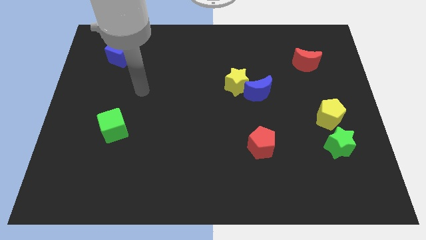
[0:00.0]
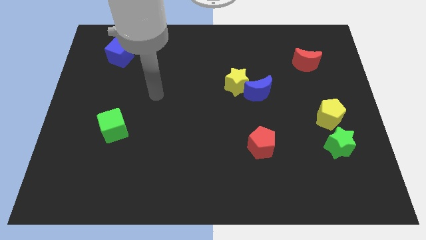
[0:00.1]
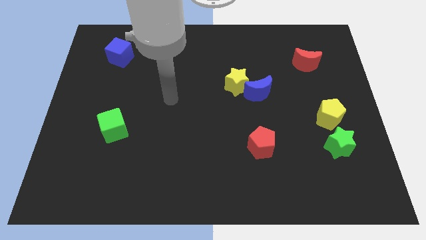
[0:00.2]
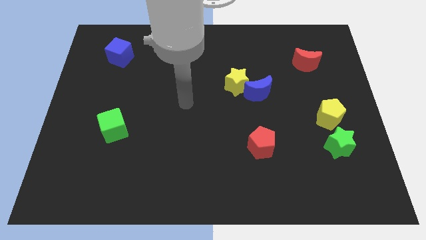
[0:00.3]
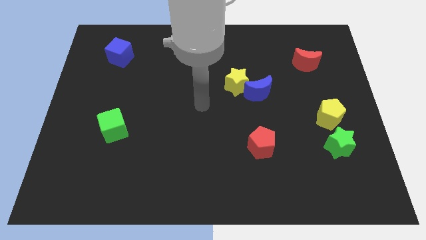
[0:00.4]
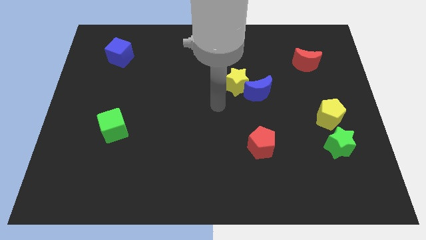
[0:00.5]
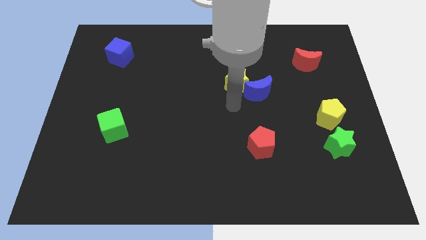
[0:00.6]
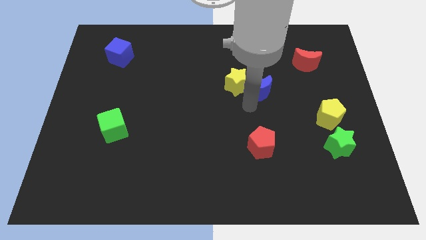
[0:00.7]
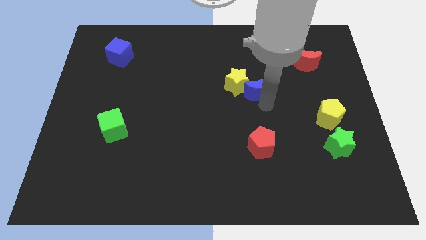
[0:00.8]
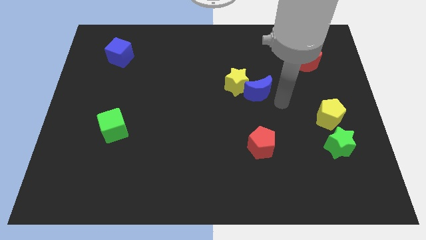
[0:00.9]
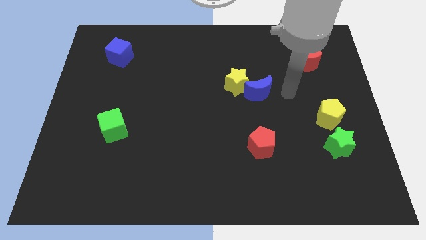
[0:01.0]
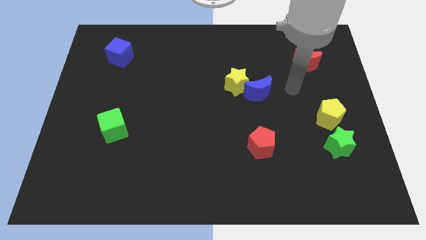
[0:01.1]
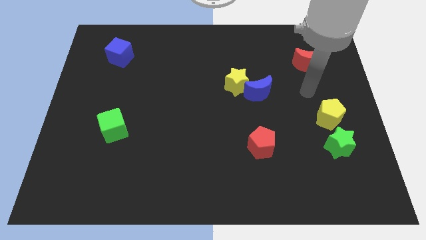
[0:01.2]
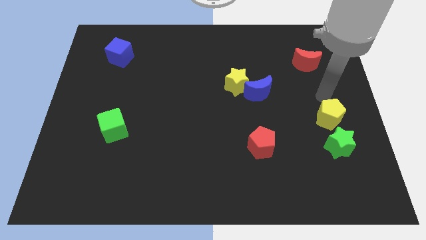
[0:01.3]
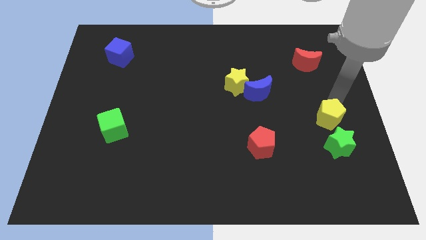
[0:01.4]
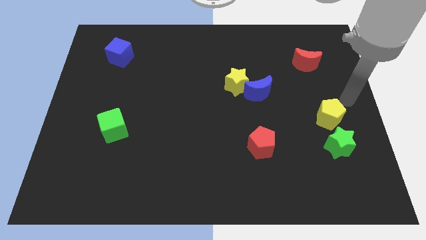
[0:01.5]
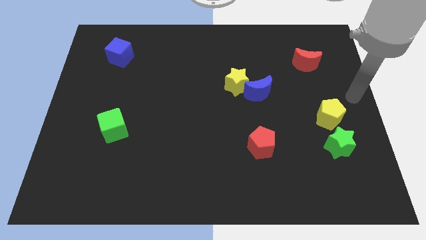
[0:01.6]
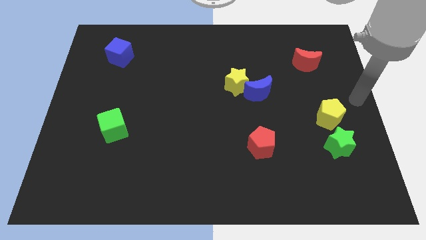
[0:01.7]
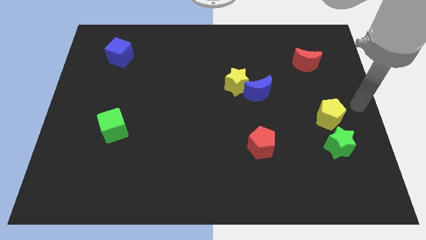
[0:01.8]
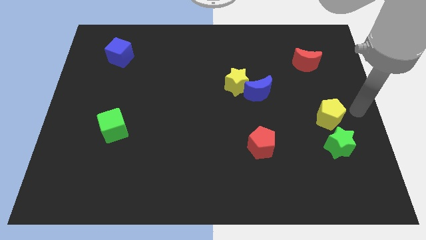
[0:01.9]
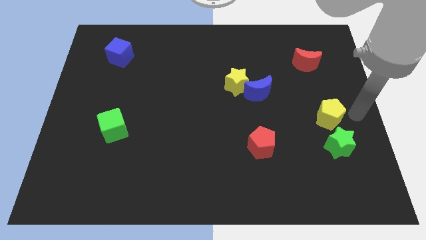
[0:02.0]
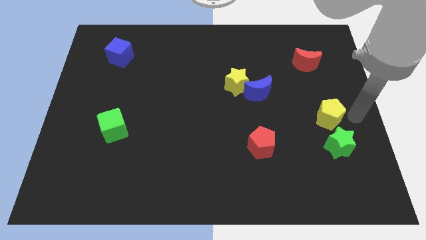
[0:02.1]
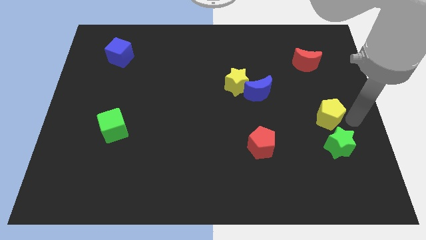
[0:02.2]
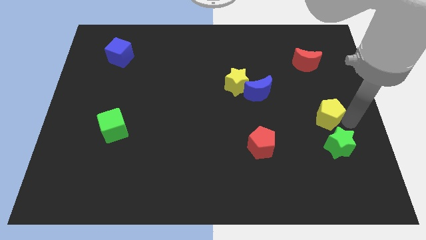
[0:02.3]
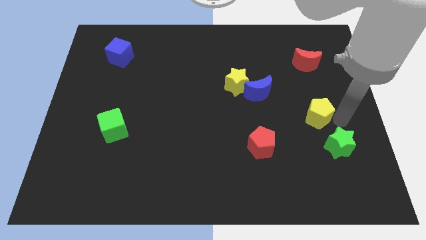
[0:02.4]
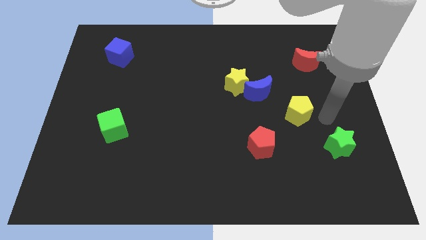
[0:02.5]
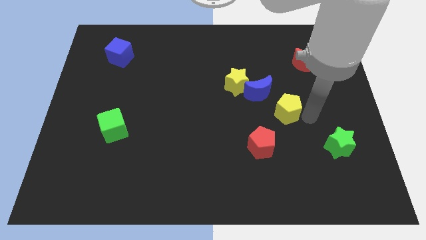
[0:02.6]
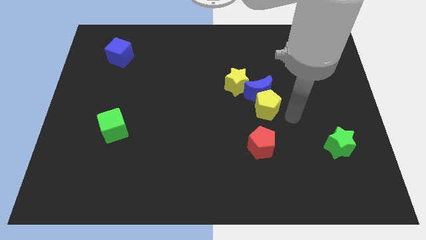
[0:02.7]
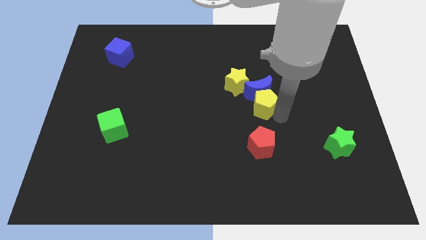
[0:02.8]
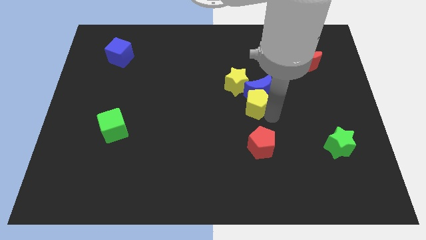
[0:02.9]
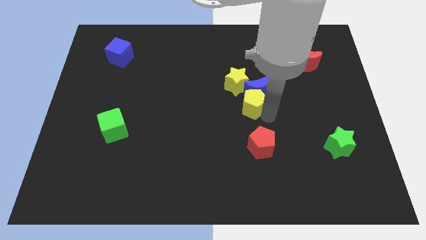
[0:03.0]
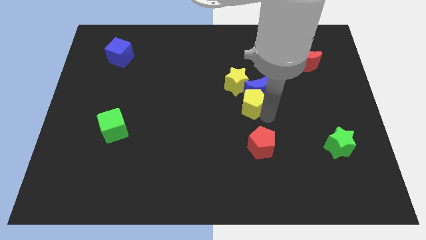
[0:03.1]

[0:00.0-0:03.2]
push the yellow pentagon into blue crescent

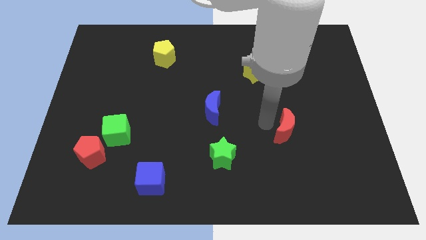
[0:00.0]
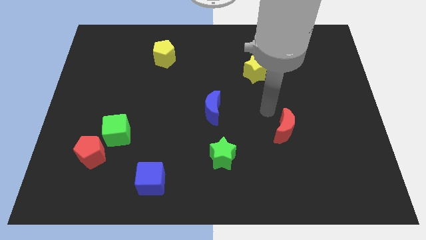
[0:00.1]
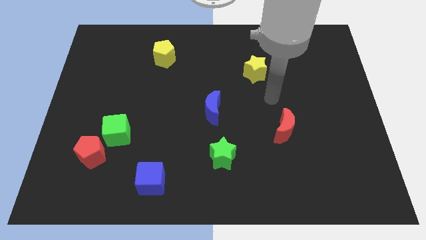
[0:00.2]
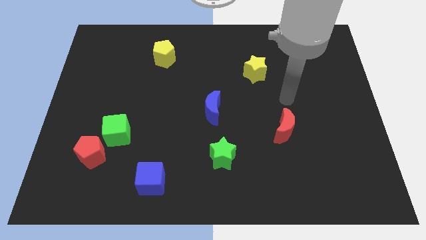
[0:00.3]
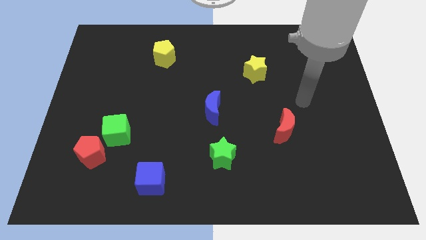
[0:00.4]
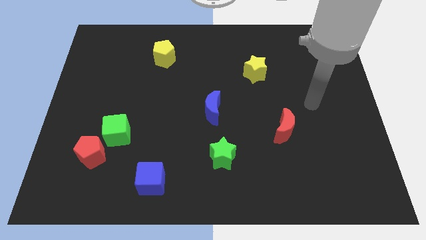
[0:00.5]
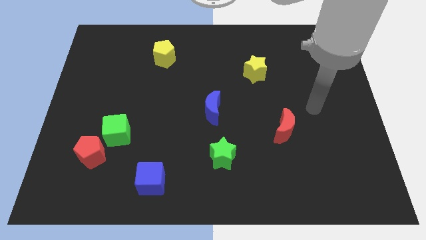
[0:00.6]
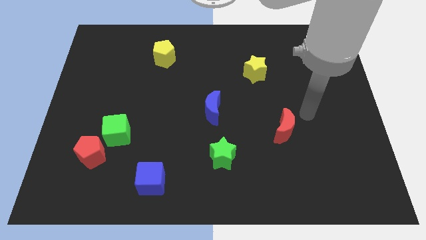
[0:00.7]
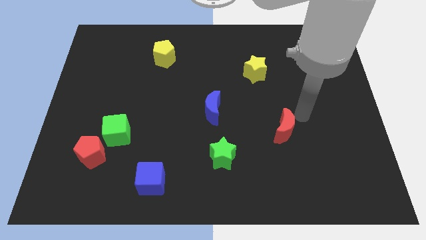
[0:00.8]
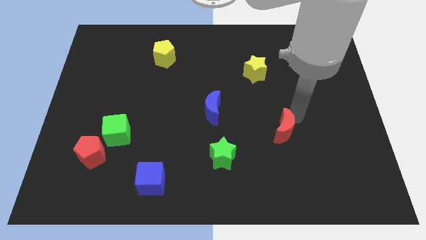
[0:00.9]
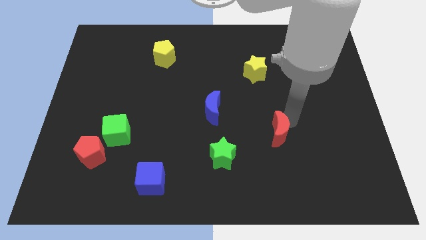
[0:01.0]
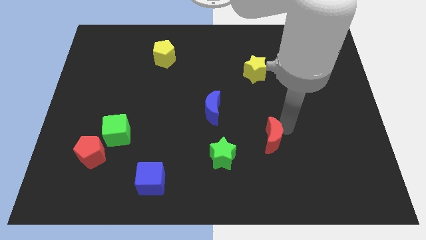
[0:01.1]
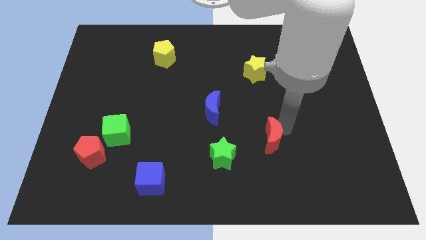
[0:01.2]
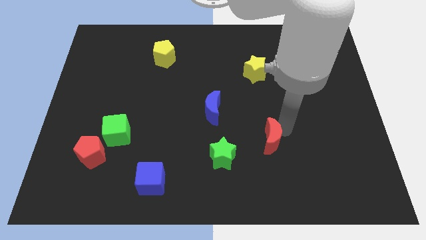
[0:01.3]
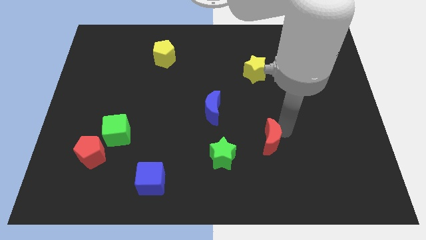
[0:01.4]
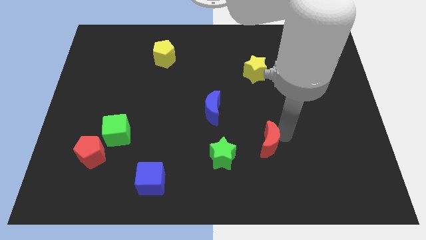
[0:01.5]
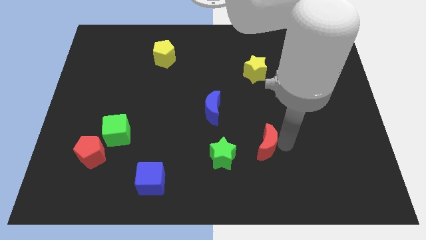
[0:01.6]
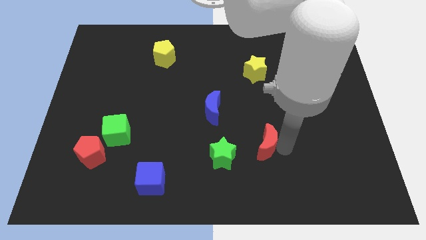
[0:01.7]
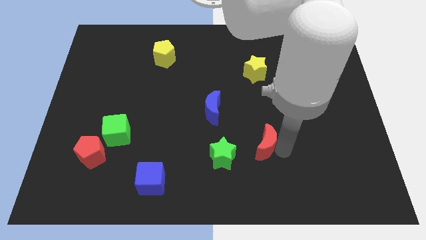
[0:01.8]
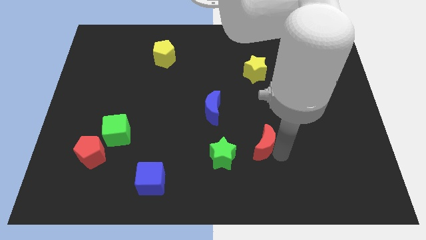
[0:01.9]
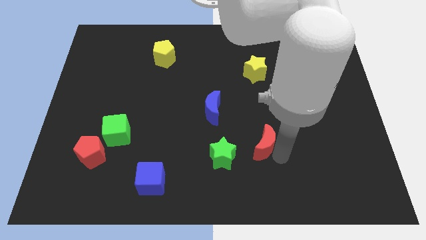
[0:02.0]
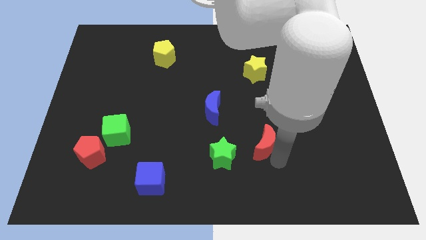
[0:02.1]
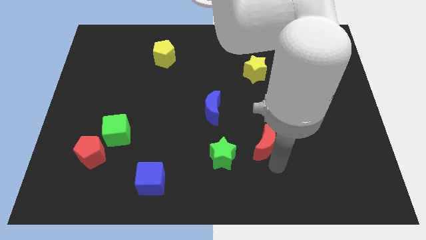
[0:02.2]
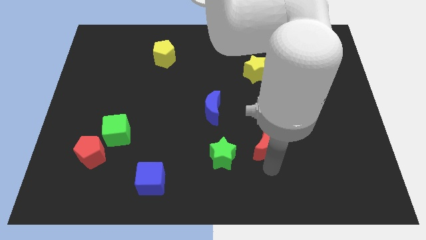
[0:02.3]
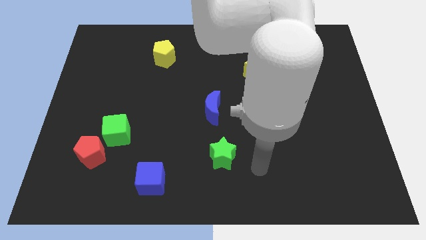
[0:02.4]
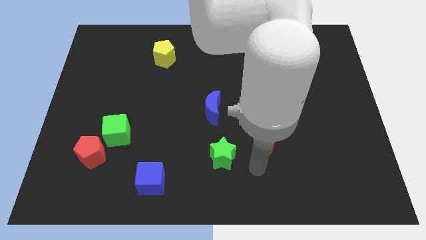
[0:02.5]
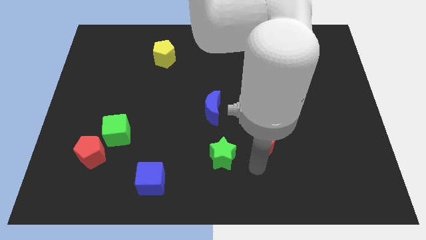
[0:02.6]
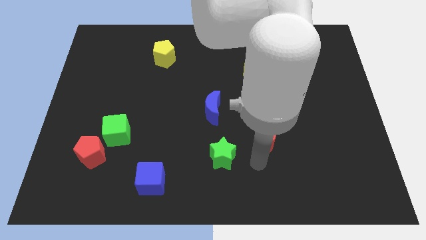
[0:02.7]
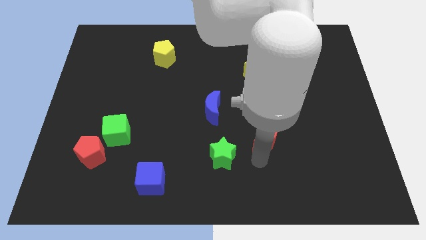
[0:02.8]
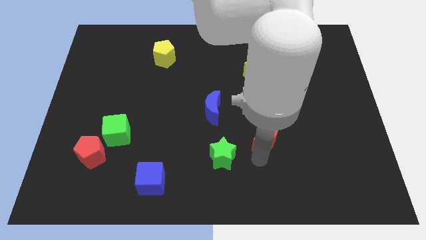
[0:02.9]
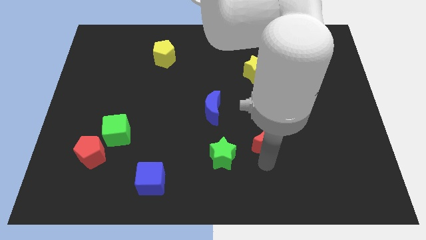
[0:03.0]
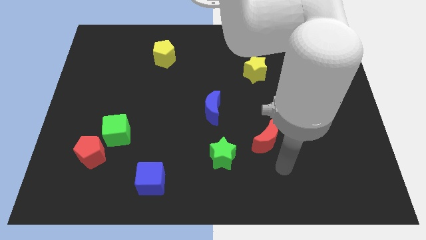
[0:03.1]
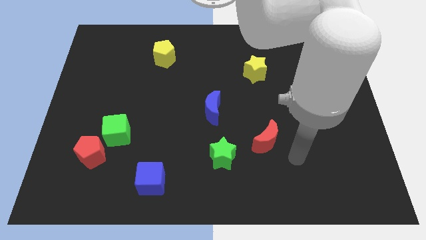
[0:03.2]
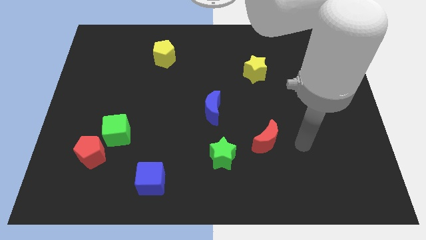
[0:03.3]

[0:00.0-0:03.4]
place the red moon at the top right of the green star

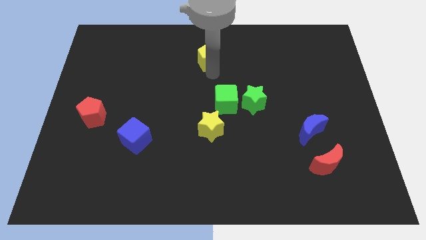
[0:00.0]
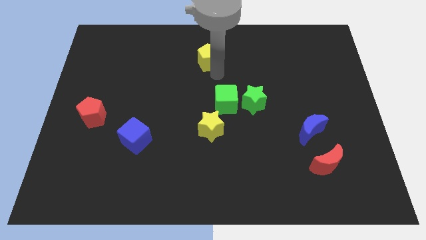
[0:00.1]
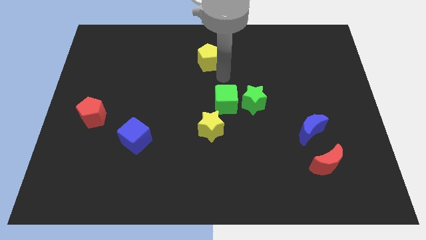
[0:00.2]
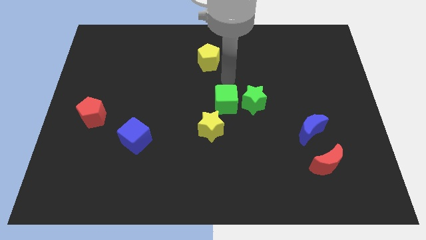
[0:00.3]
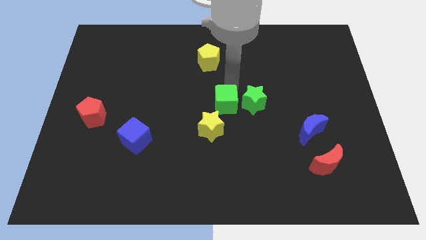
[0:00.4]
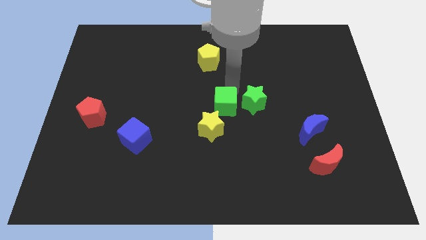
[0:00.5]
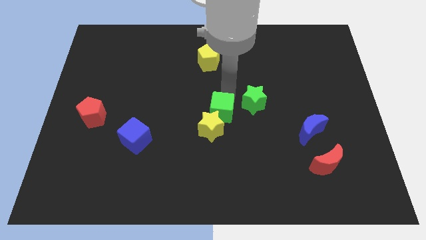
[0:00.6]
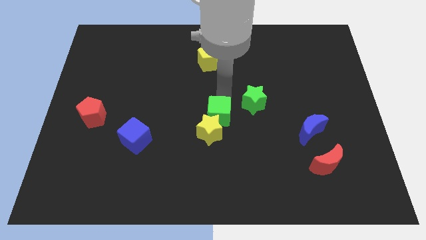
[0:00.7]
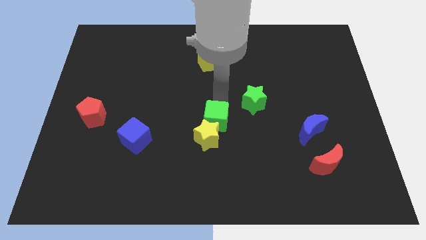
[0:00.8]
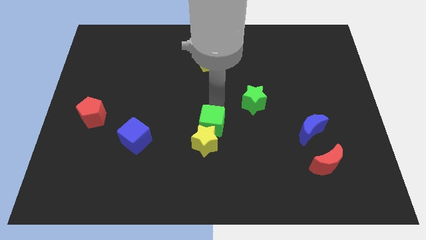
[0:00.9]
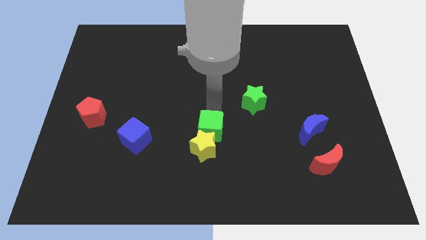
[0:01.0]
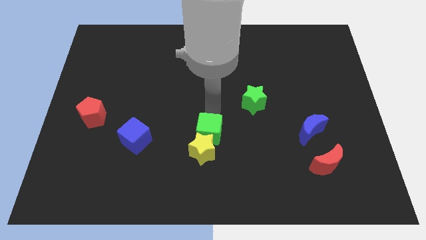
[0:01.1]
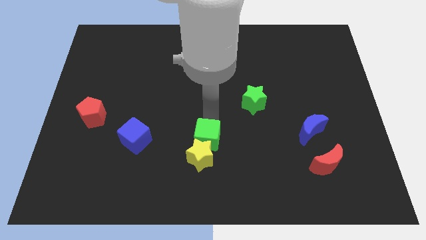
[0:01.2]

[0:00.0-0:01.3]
push the green cube to the right of the blue cube

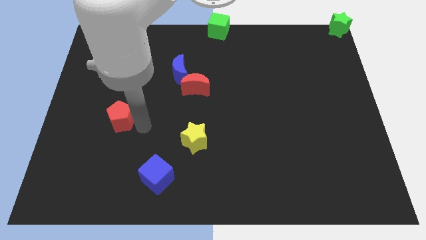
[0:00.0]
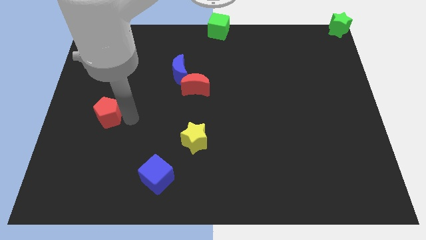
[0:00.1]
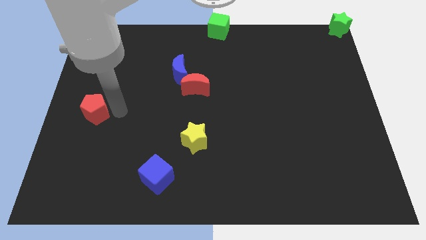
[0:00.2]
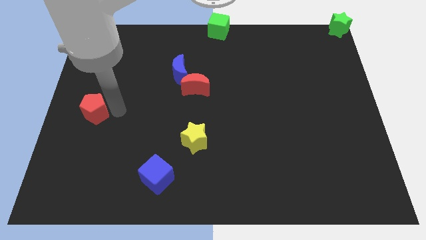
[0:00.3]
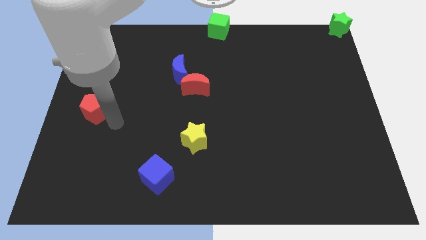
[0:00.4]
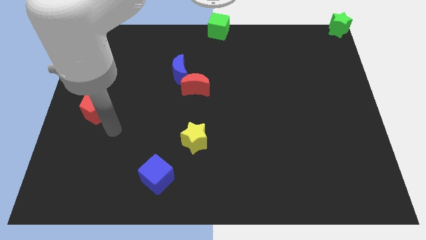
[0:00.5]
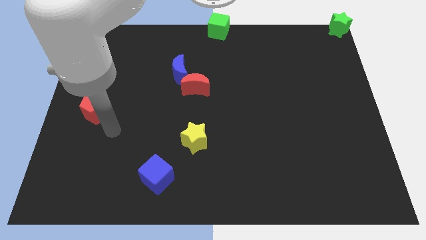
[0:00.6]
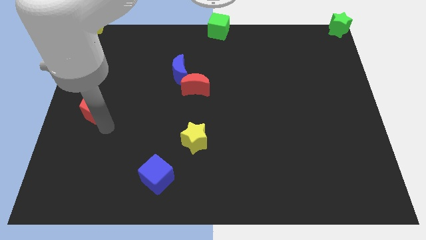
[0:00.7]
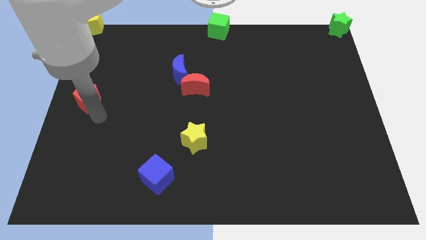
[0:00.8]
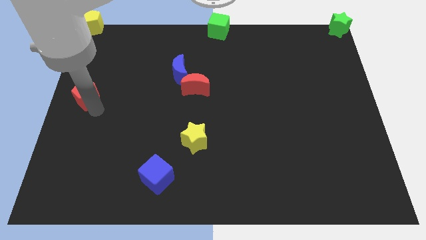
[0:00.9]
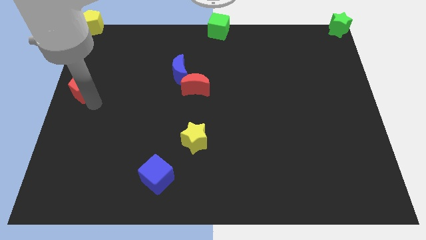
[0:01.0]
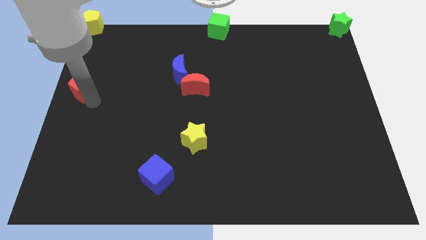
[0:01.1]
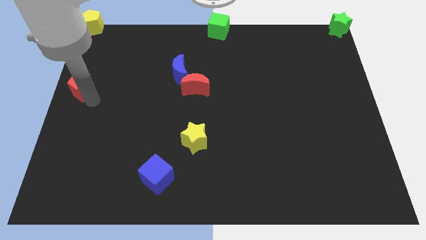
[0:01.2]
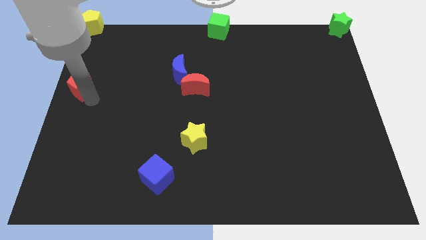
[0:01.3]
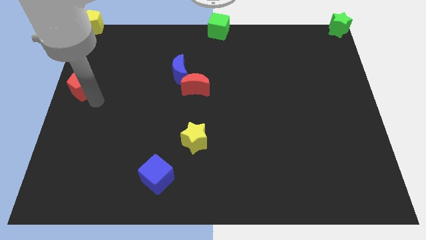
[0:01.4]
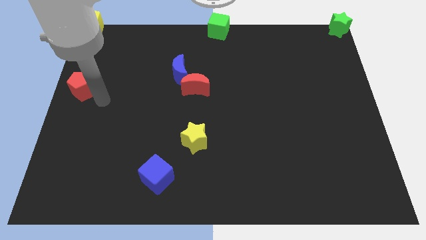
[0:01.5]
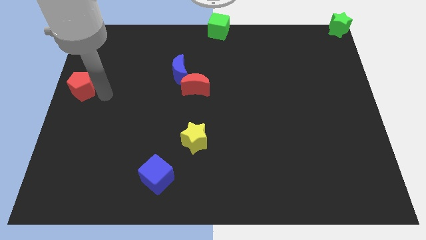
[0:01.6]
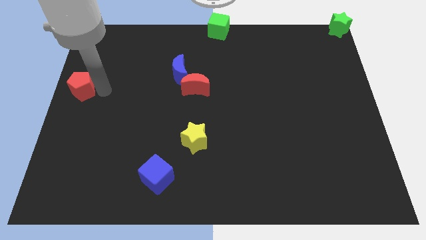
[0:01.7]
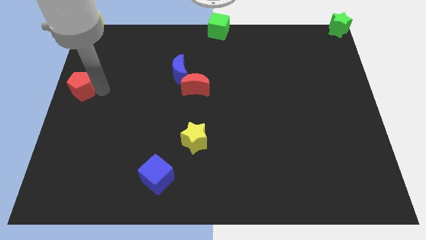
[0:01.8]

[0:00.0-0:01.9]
slide red pentagon to the left center
